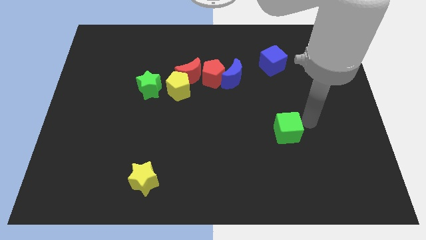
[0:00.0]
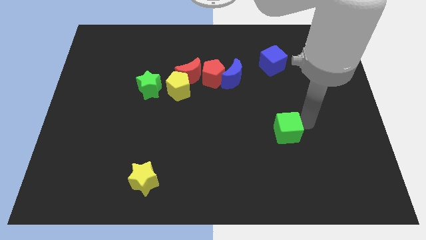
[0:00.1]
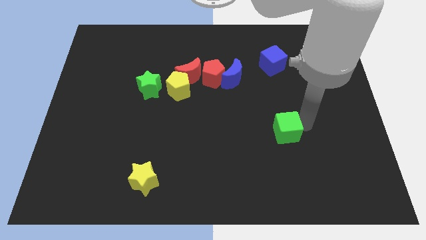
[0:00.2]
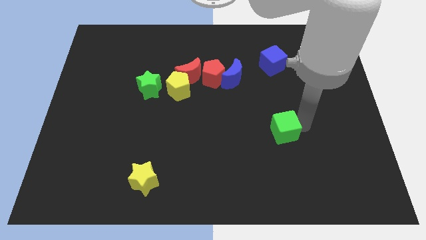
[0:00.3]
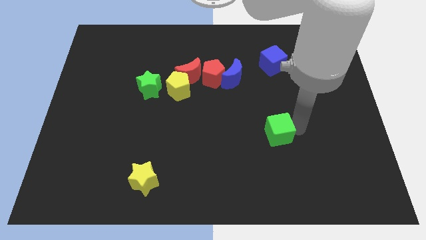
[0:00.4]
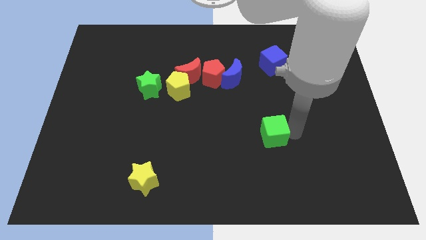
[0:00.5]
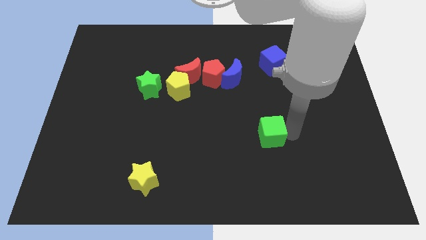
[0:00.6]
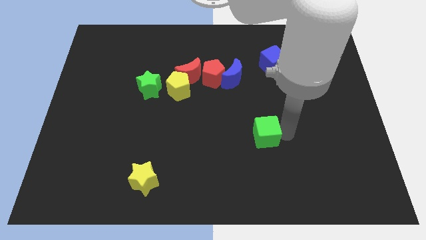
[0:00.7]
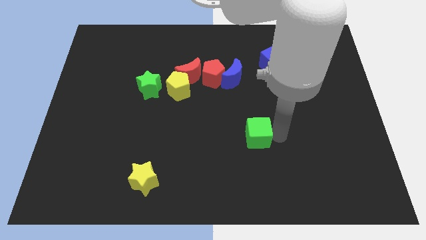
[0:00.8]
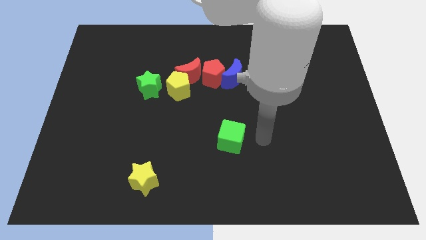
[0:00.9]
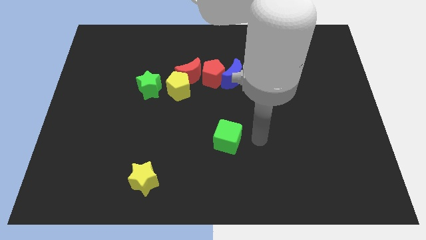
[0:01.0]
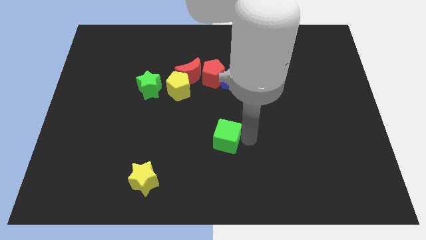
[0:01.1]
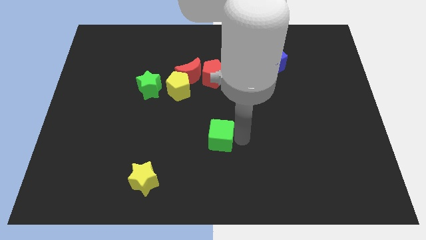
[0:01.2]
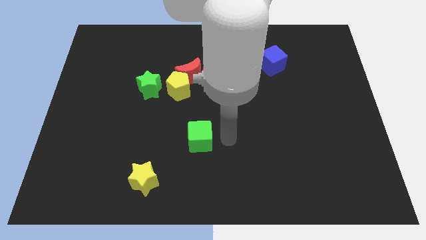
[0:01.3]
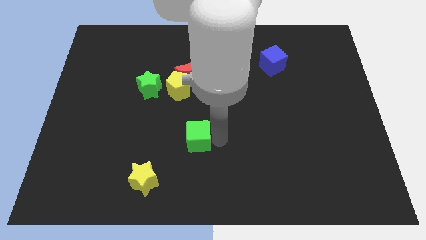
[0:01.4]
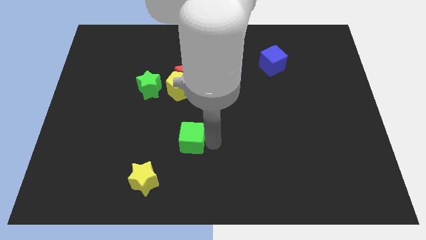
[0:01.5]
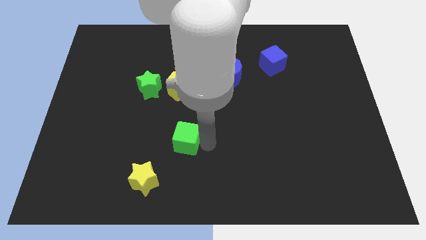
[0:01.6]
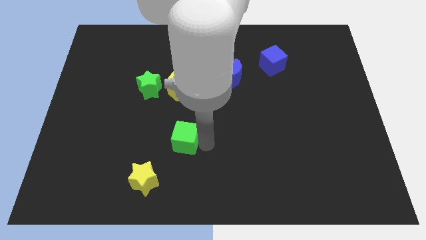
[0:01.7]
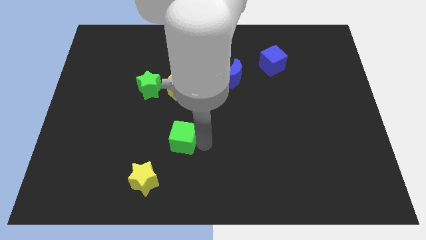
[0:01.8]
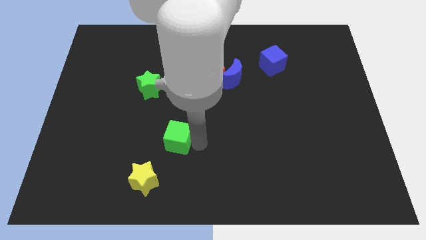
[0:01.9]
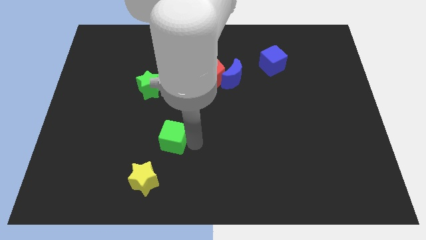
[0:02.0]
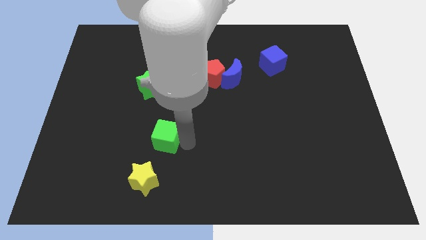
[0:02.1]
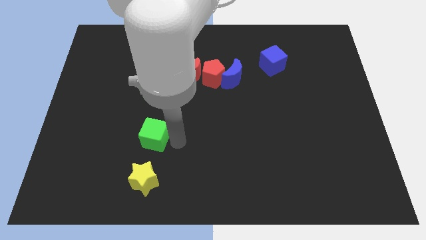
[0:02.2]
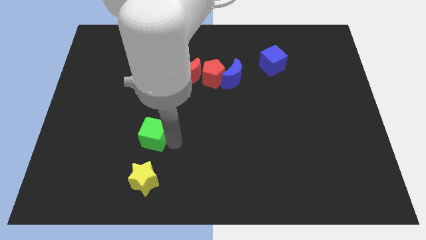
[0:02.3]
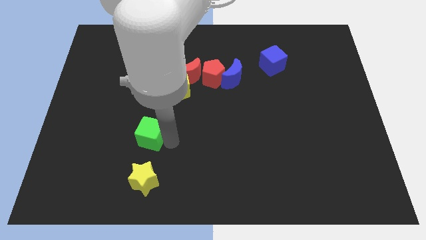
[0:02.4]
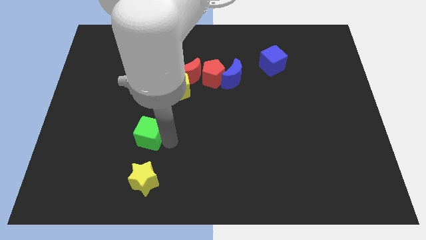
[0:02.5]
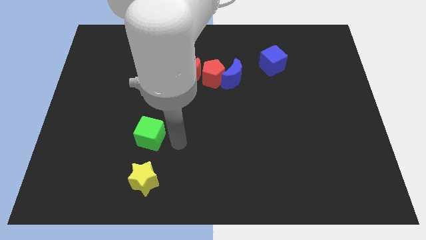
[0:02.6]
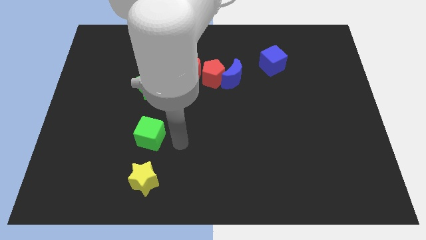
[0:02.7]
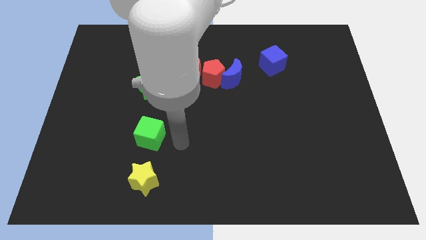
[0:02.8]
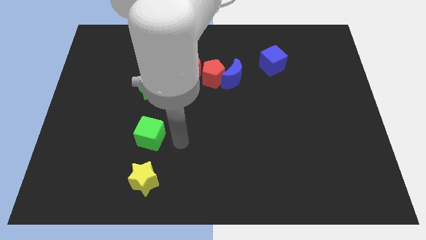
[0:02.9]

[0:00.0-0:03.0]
move the green cube to the bottom of the green star

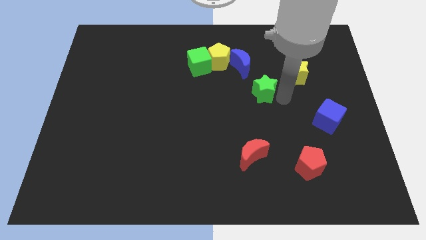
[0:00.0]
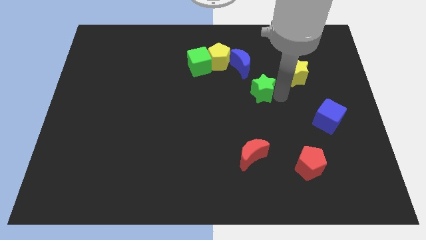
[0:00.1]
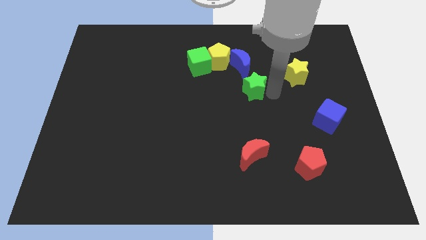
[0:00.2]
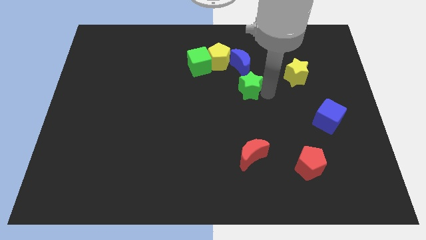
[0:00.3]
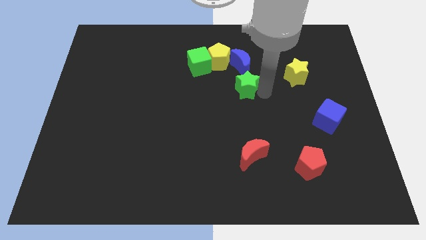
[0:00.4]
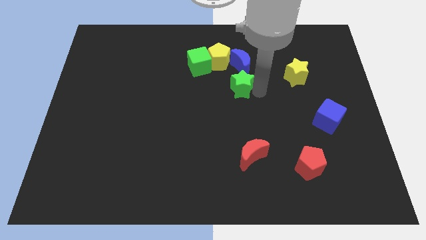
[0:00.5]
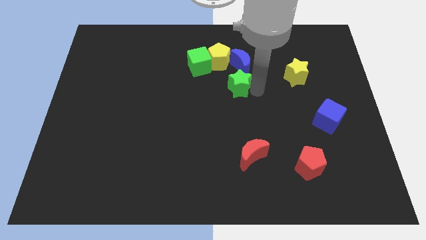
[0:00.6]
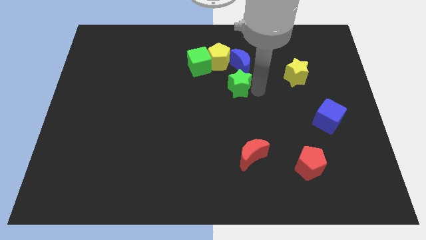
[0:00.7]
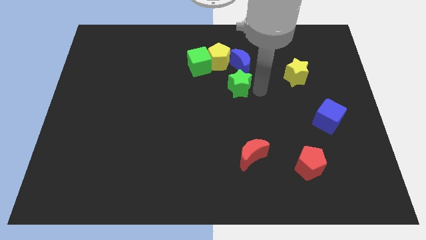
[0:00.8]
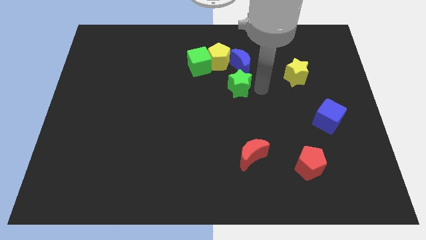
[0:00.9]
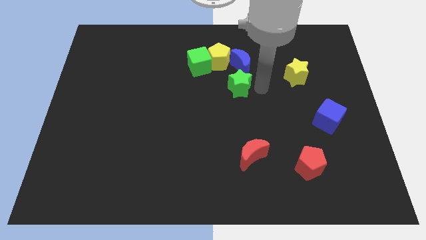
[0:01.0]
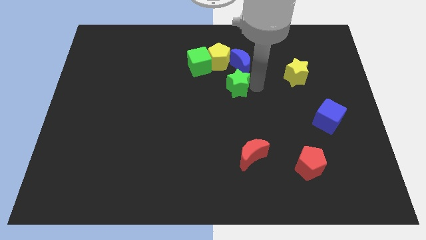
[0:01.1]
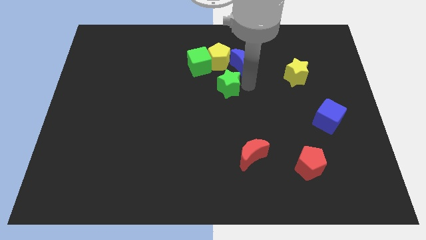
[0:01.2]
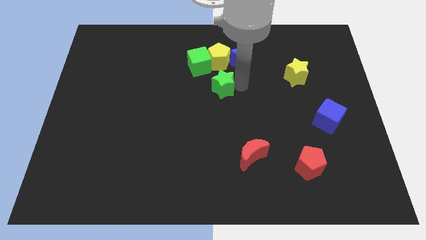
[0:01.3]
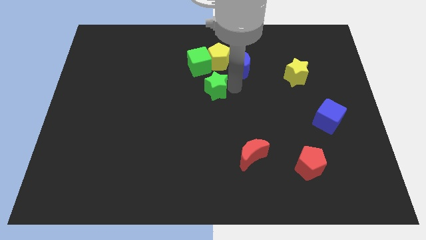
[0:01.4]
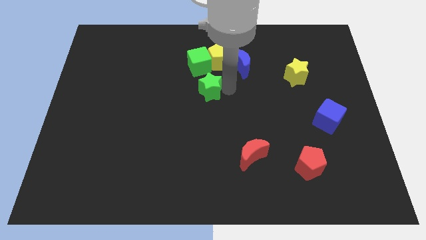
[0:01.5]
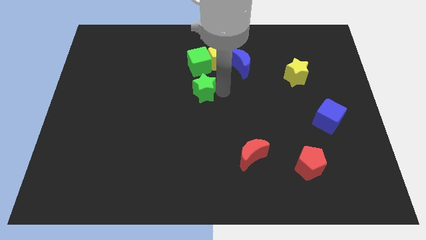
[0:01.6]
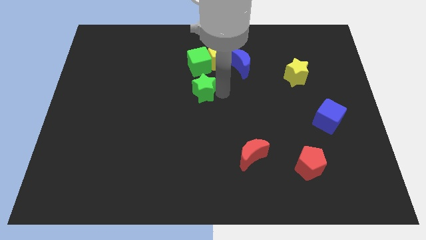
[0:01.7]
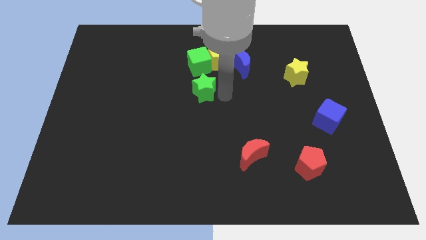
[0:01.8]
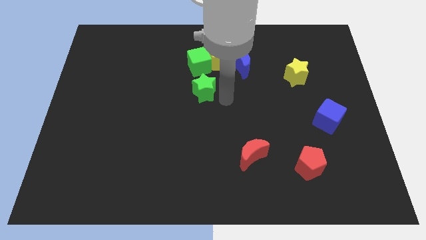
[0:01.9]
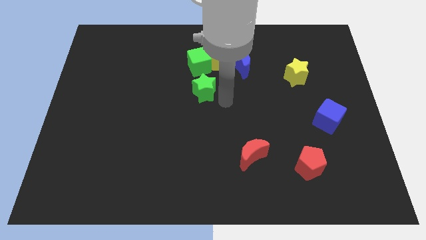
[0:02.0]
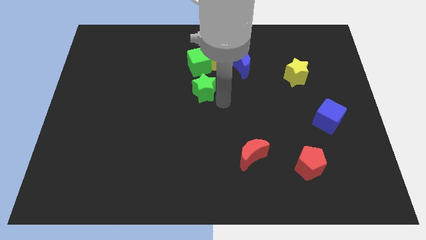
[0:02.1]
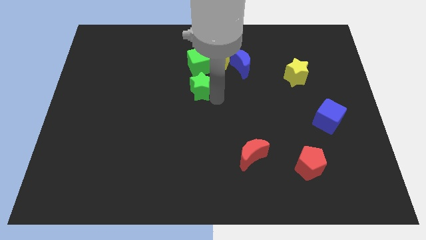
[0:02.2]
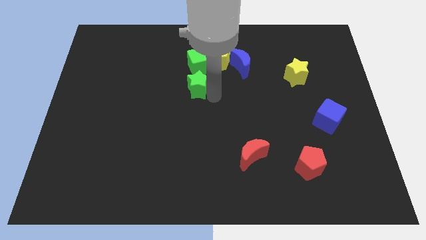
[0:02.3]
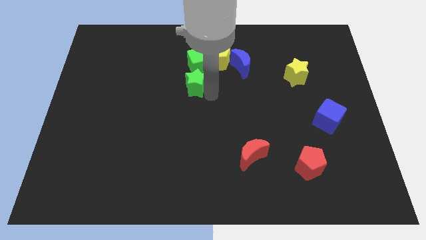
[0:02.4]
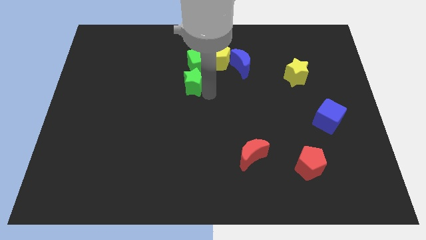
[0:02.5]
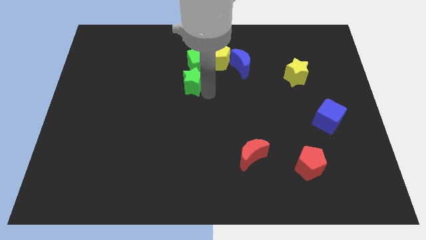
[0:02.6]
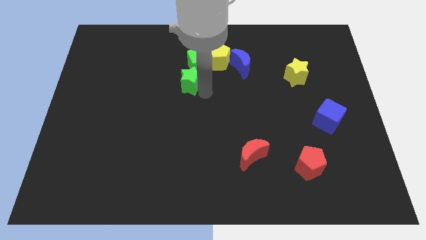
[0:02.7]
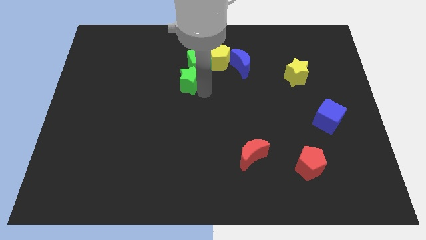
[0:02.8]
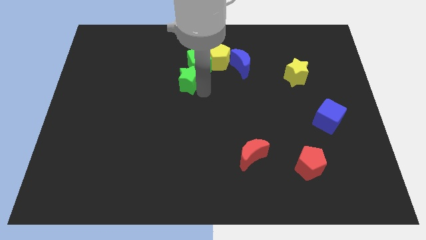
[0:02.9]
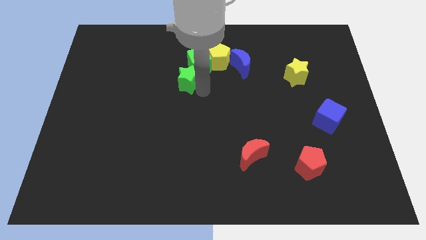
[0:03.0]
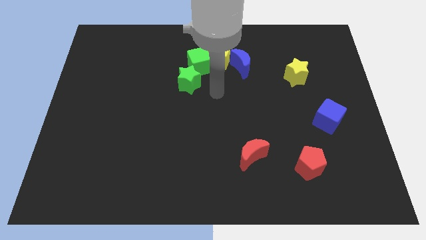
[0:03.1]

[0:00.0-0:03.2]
place the green star bottom left to the green cube

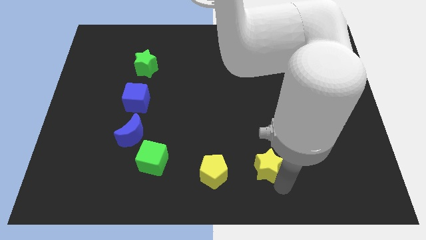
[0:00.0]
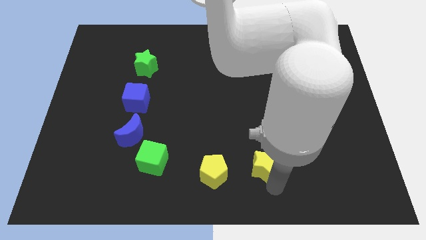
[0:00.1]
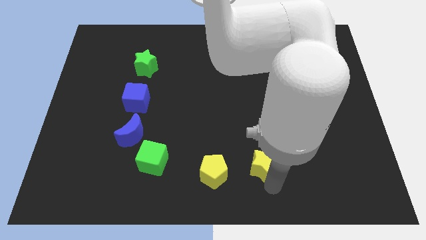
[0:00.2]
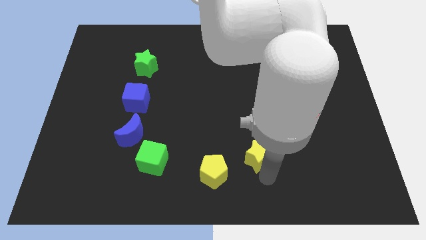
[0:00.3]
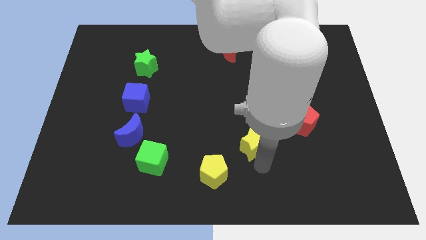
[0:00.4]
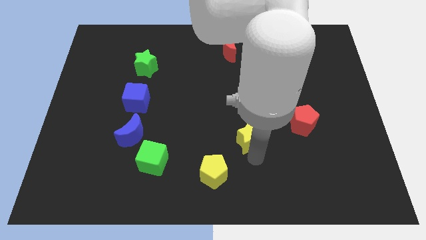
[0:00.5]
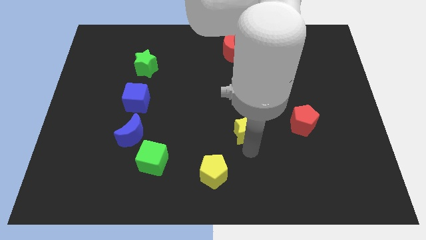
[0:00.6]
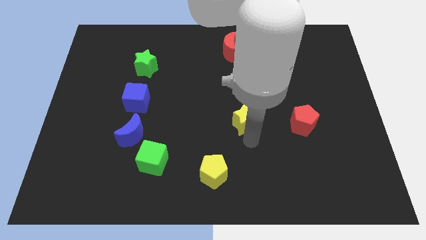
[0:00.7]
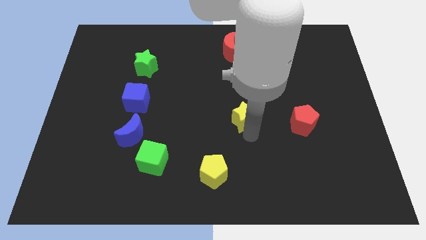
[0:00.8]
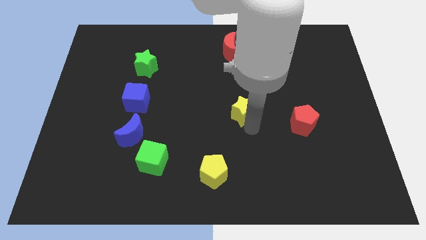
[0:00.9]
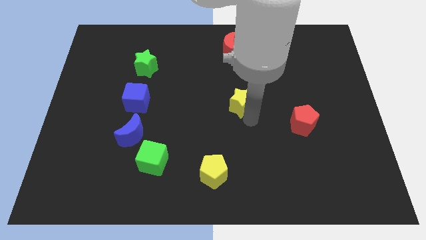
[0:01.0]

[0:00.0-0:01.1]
place the yellow star to the center of the board

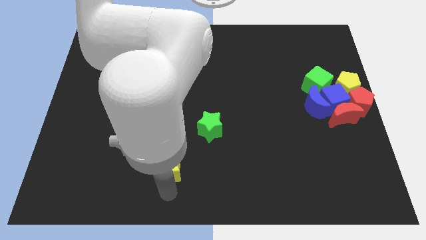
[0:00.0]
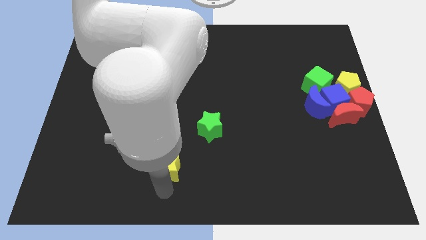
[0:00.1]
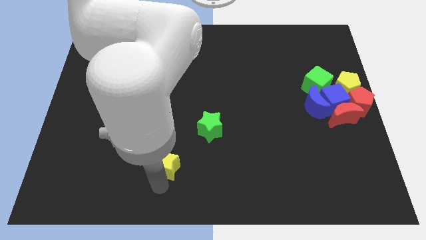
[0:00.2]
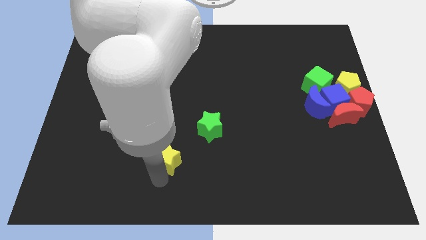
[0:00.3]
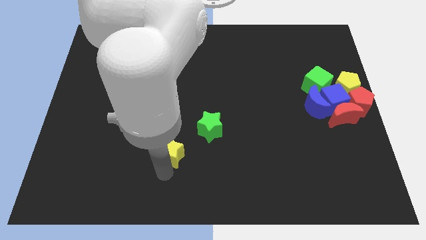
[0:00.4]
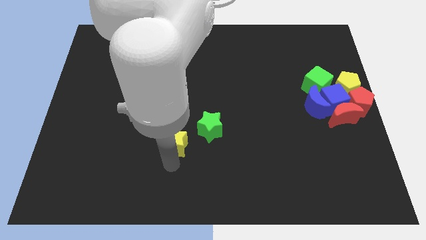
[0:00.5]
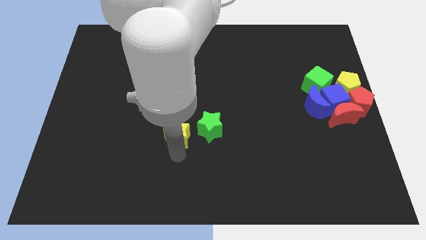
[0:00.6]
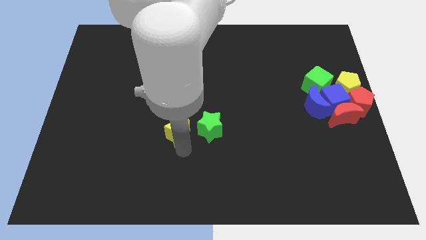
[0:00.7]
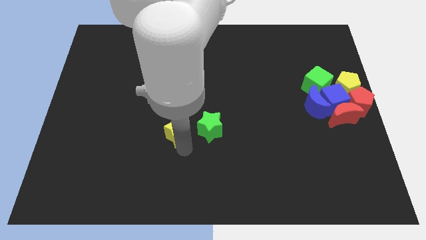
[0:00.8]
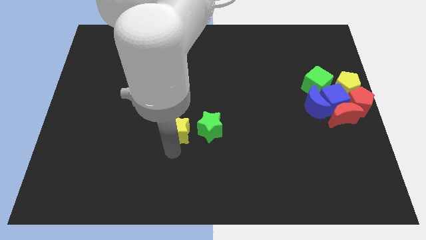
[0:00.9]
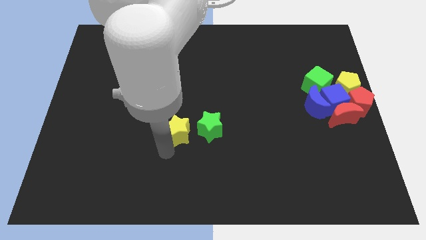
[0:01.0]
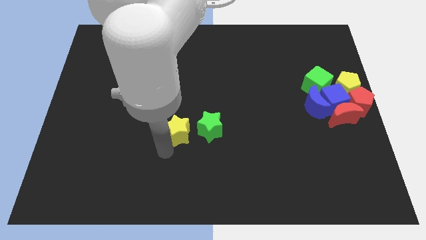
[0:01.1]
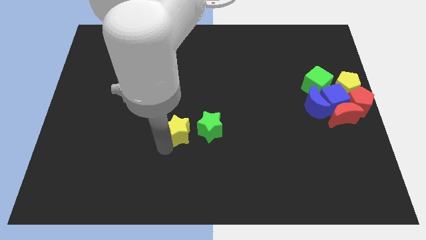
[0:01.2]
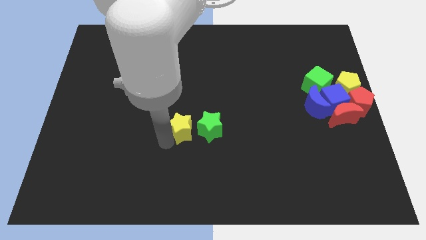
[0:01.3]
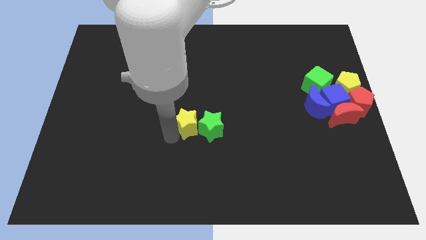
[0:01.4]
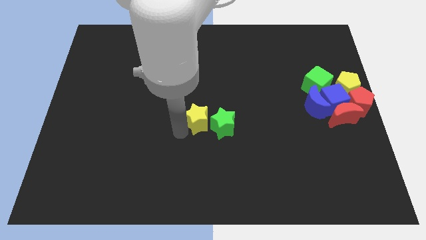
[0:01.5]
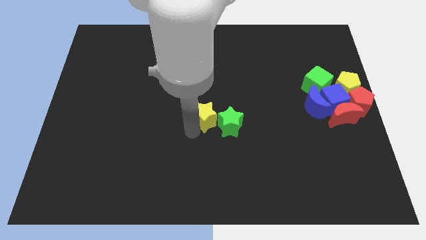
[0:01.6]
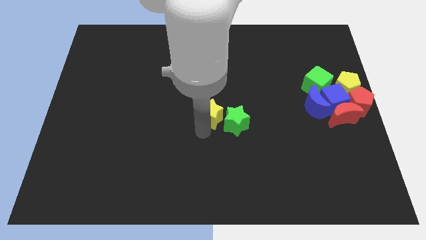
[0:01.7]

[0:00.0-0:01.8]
take the yellow star close to the green star
